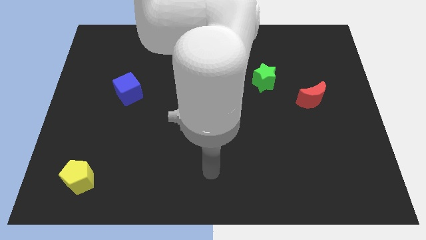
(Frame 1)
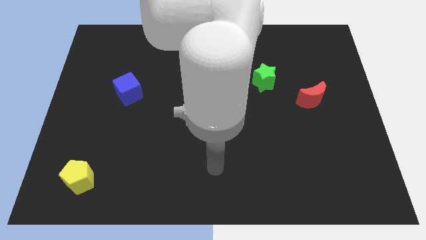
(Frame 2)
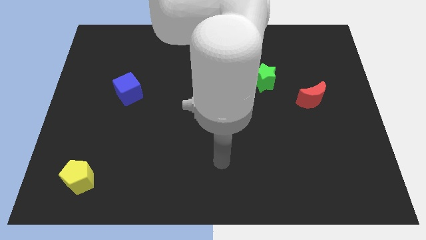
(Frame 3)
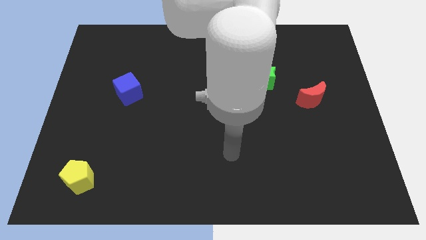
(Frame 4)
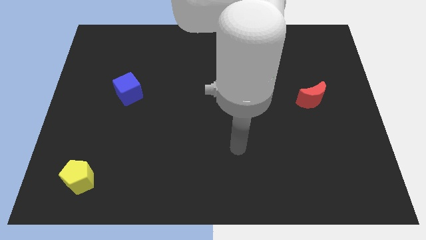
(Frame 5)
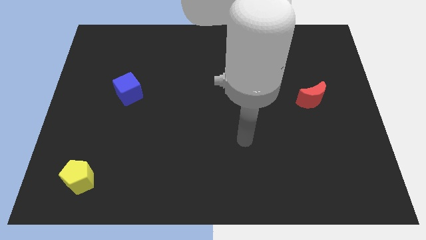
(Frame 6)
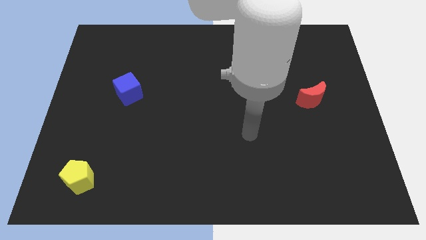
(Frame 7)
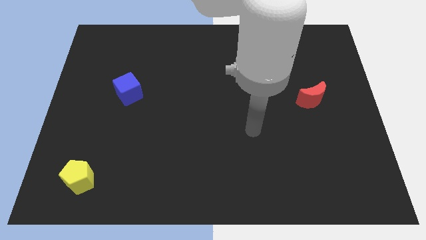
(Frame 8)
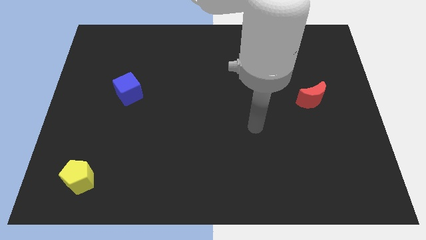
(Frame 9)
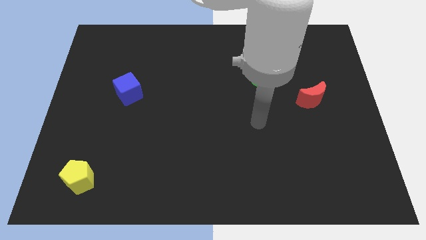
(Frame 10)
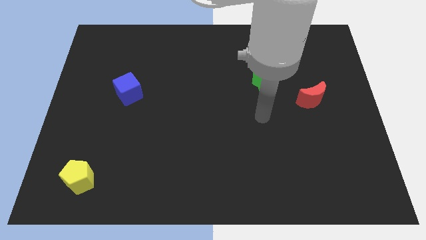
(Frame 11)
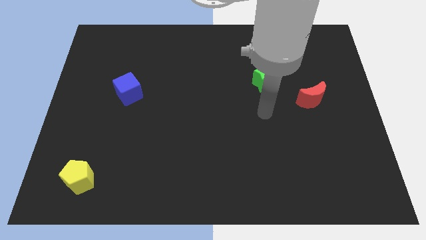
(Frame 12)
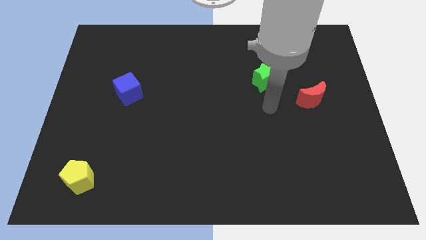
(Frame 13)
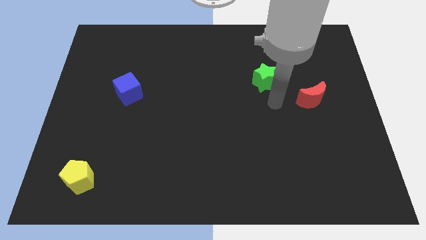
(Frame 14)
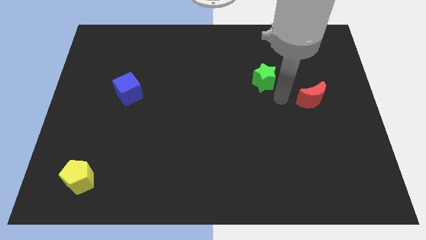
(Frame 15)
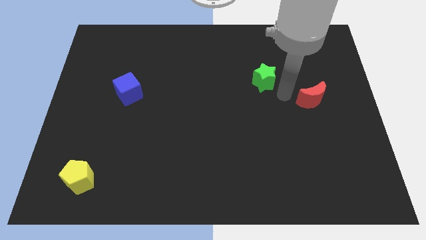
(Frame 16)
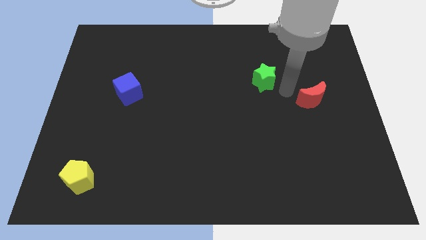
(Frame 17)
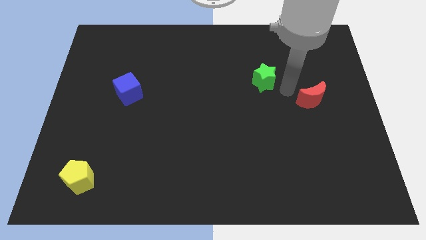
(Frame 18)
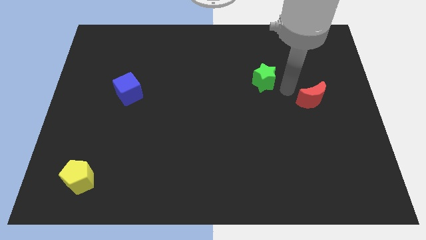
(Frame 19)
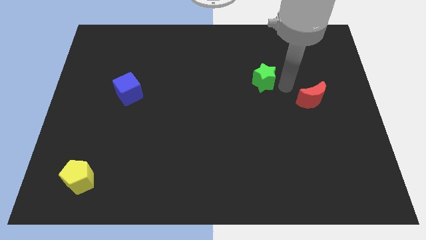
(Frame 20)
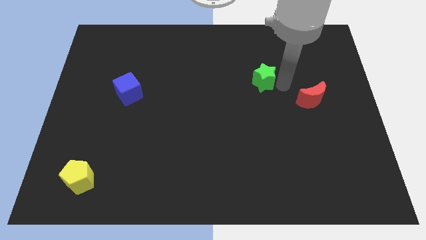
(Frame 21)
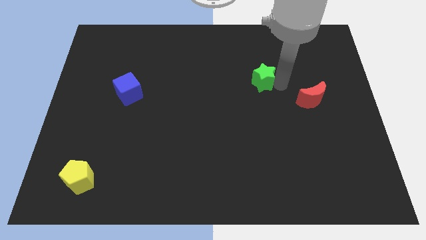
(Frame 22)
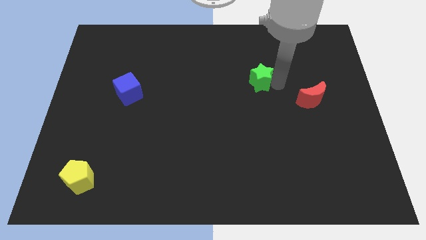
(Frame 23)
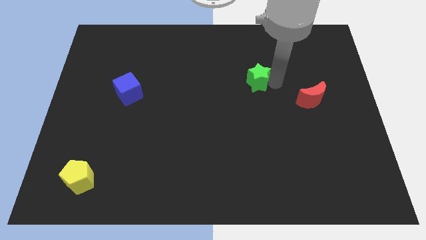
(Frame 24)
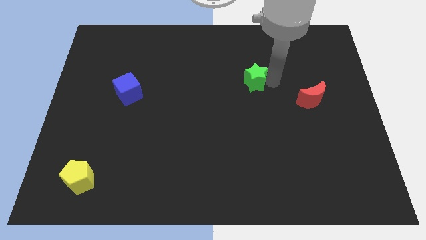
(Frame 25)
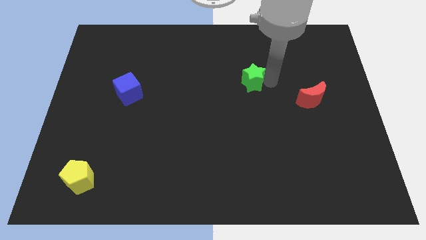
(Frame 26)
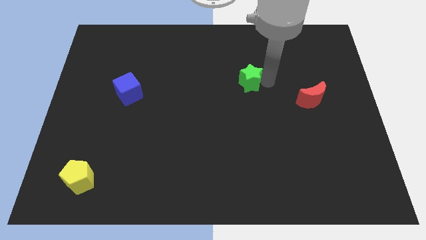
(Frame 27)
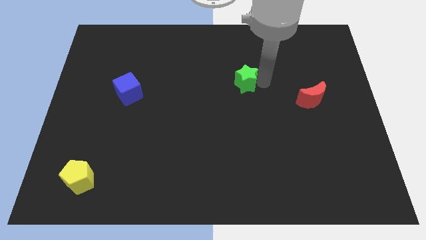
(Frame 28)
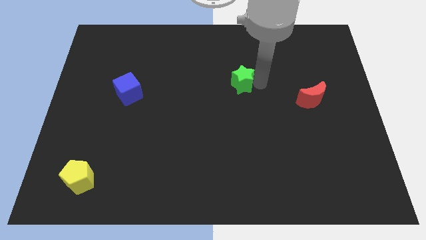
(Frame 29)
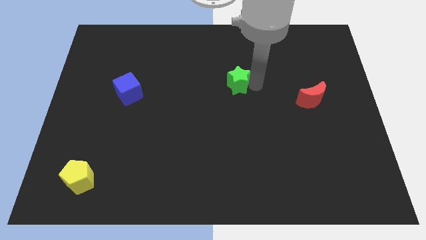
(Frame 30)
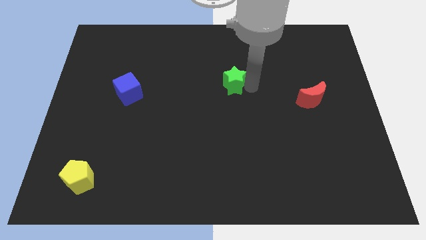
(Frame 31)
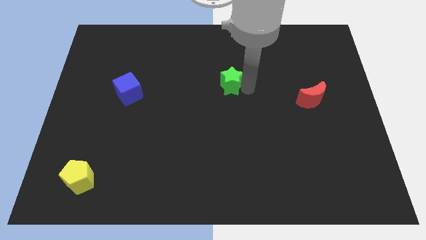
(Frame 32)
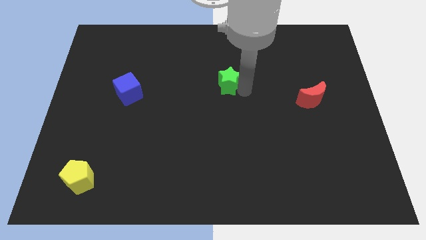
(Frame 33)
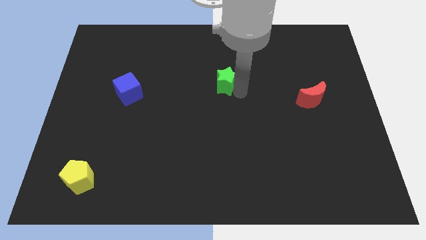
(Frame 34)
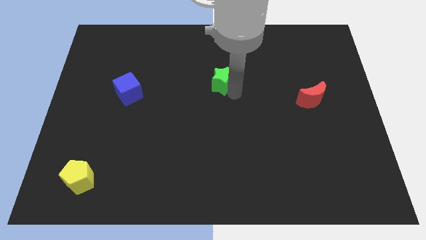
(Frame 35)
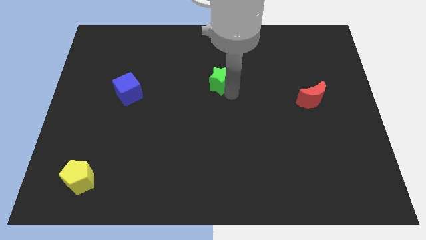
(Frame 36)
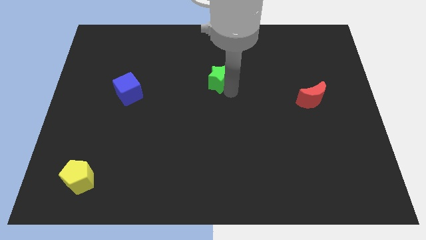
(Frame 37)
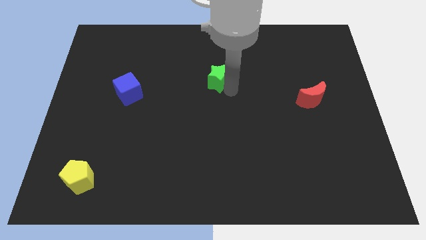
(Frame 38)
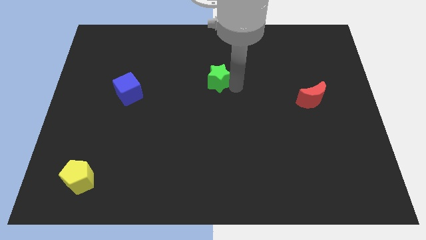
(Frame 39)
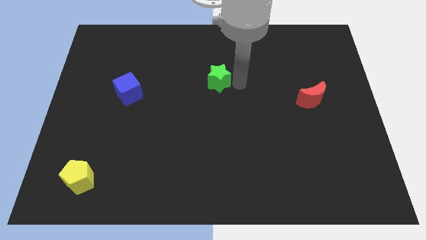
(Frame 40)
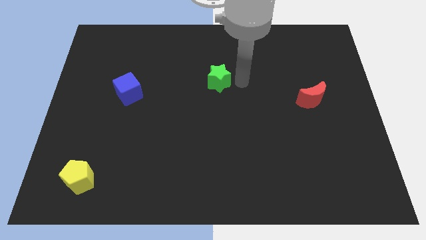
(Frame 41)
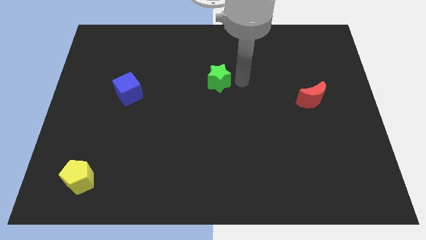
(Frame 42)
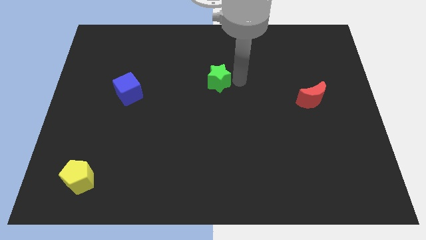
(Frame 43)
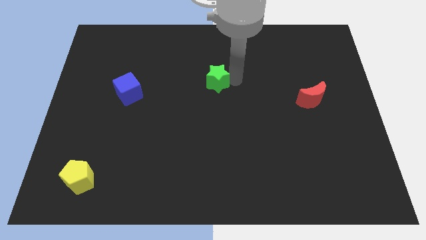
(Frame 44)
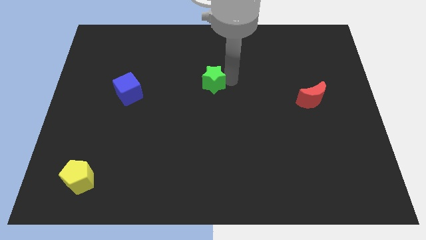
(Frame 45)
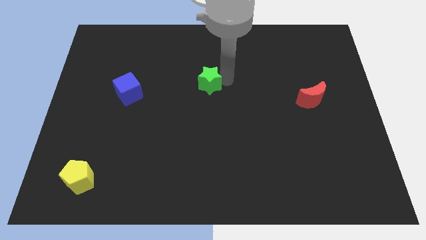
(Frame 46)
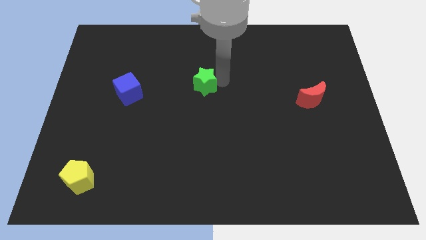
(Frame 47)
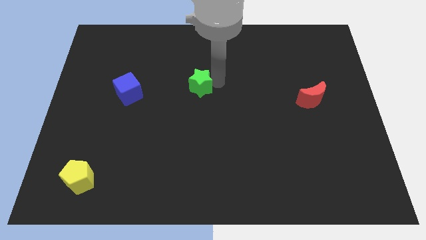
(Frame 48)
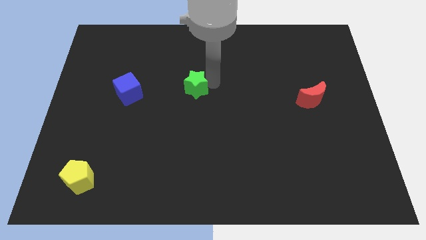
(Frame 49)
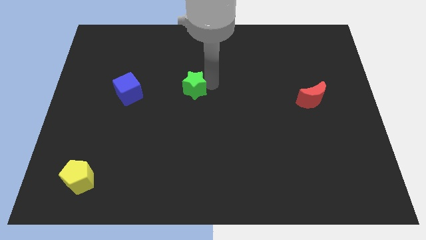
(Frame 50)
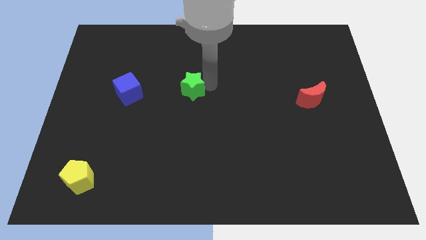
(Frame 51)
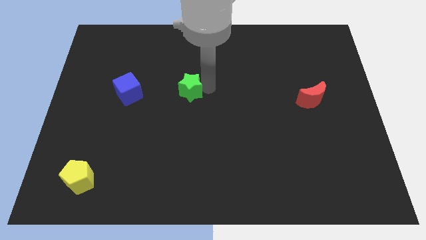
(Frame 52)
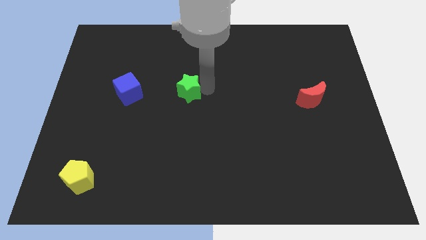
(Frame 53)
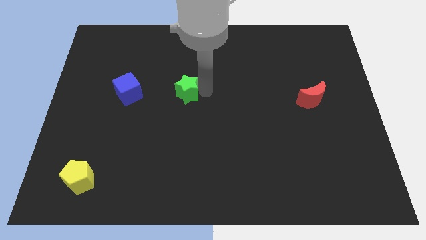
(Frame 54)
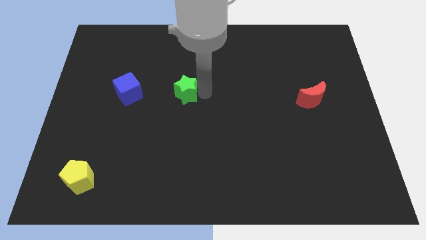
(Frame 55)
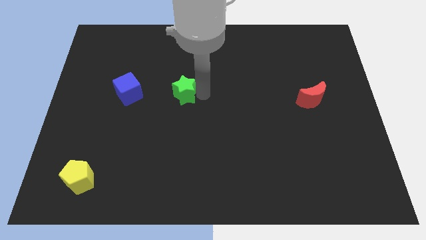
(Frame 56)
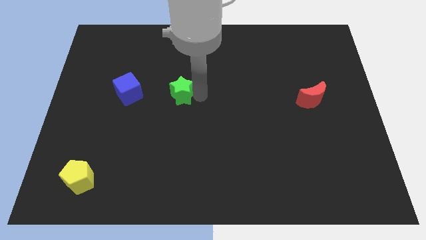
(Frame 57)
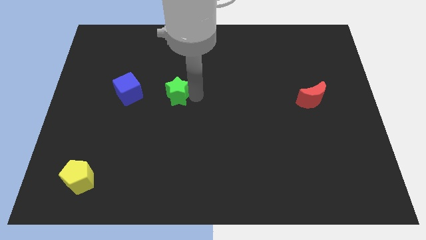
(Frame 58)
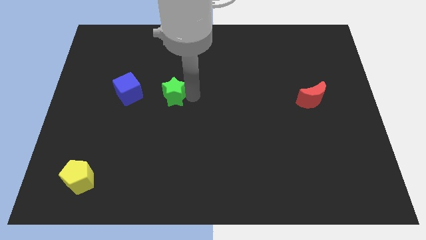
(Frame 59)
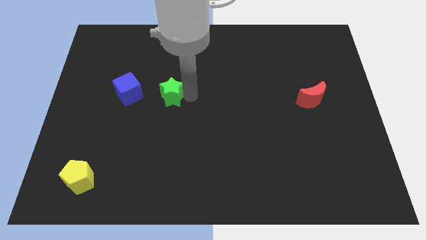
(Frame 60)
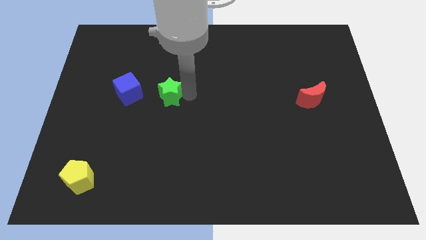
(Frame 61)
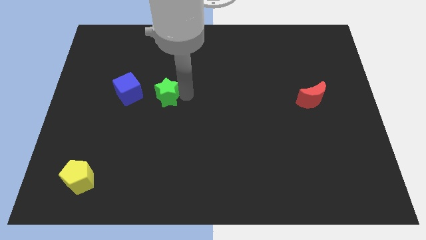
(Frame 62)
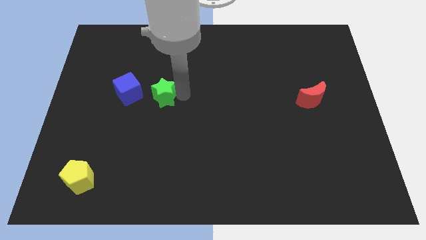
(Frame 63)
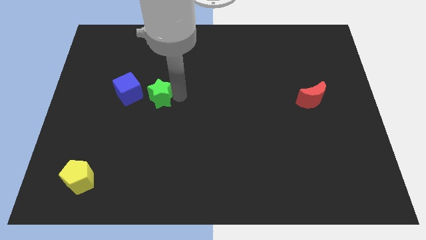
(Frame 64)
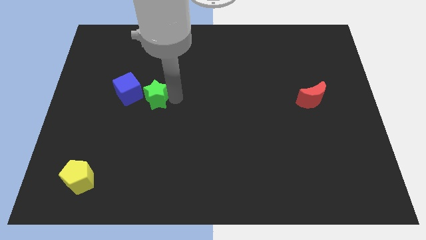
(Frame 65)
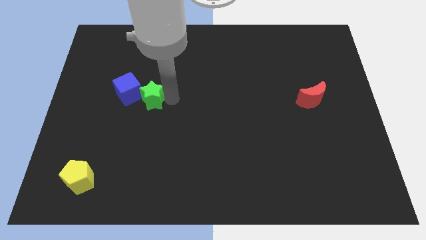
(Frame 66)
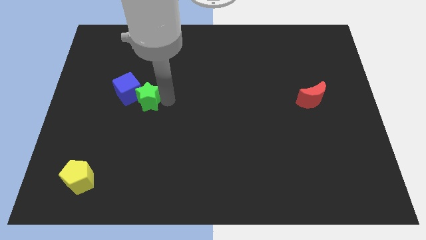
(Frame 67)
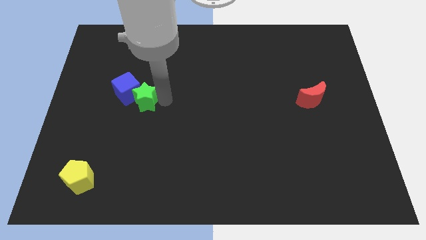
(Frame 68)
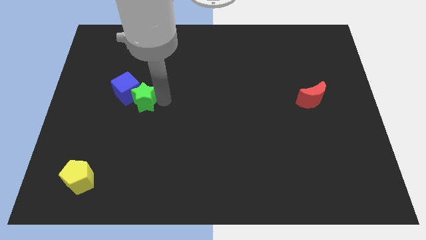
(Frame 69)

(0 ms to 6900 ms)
put the green star to the cube

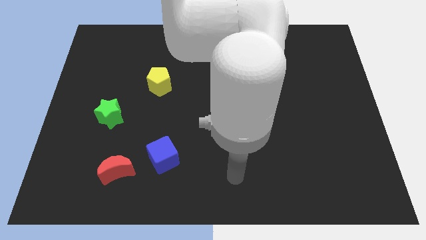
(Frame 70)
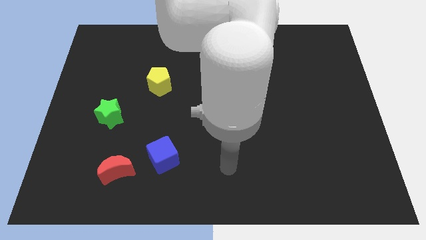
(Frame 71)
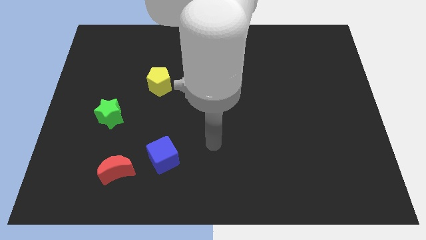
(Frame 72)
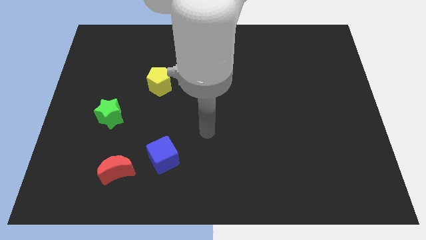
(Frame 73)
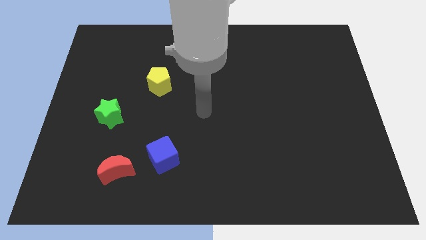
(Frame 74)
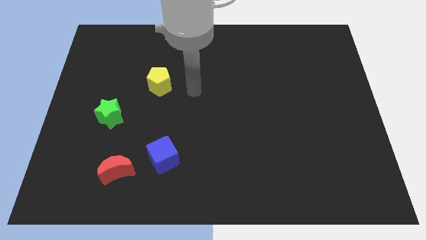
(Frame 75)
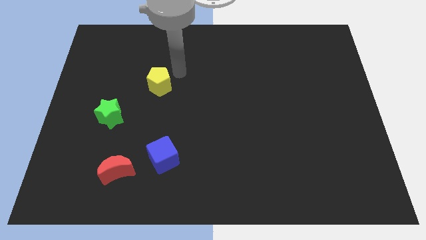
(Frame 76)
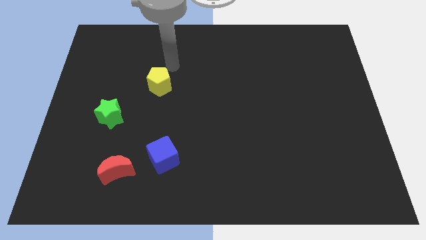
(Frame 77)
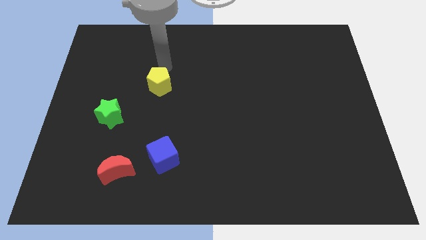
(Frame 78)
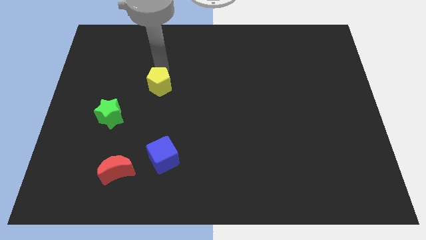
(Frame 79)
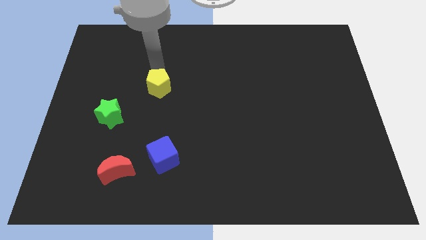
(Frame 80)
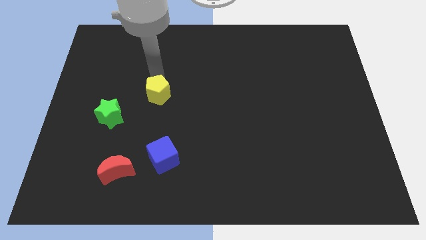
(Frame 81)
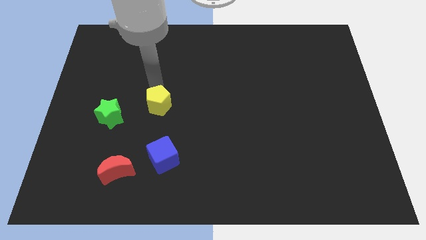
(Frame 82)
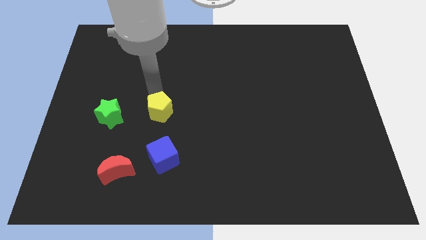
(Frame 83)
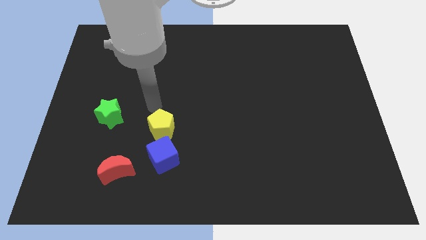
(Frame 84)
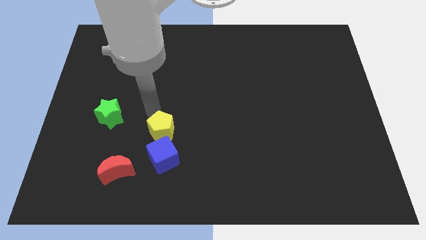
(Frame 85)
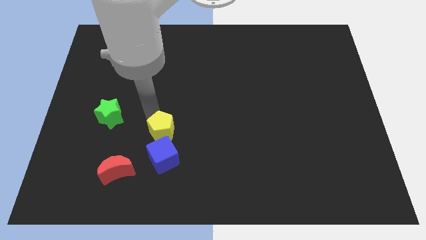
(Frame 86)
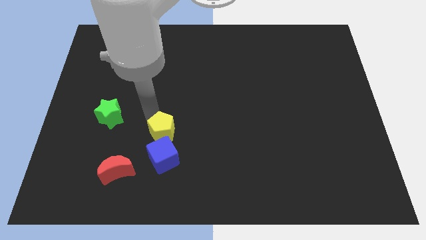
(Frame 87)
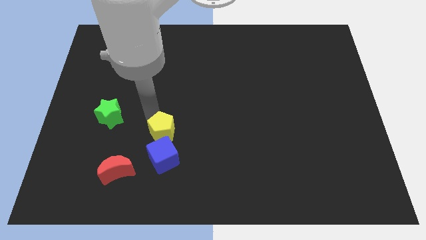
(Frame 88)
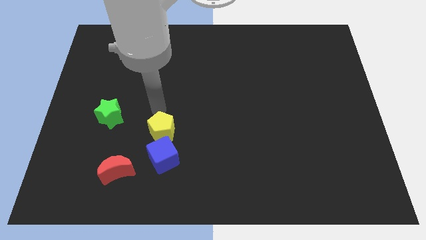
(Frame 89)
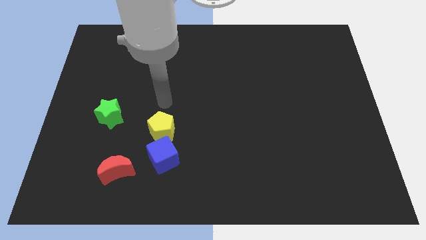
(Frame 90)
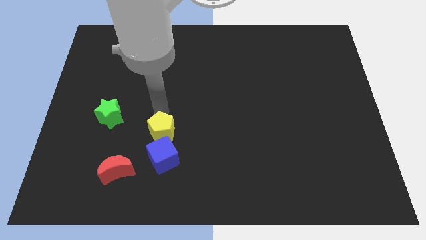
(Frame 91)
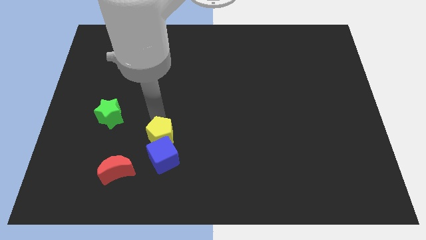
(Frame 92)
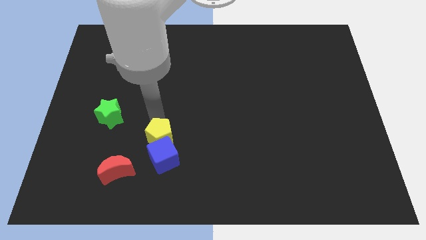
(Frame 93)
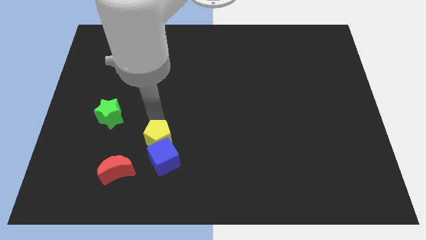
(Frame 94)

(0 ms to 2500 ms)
slide the yellow block close to the blue block
